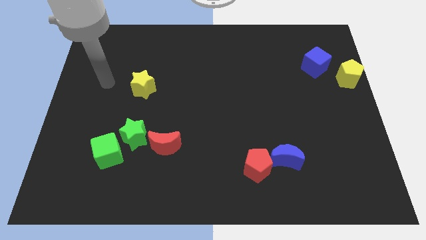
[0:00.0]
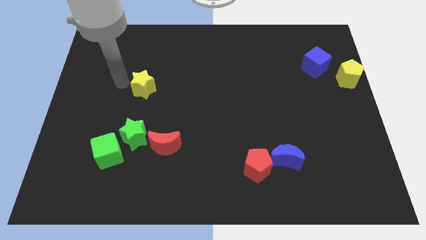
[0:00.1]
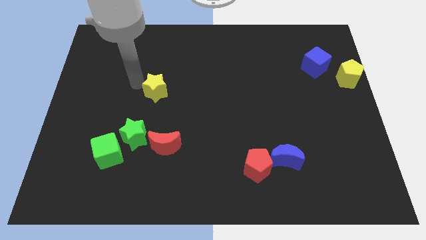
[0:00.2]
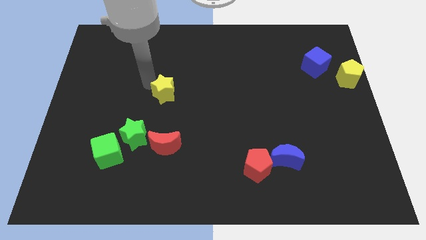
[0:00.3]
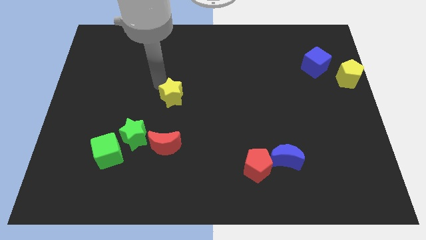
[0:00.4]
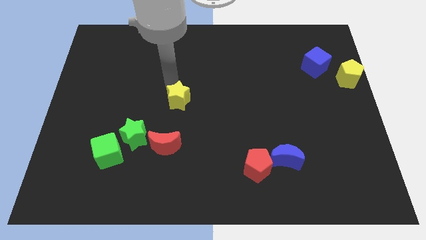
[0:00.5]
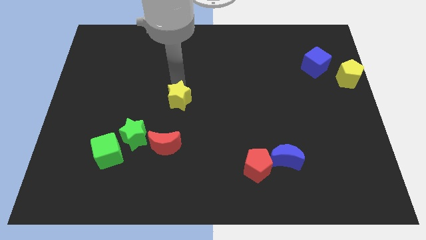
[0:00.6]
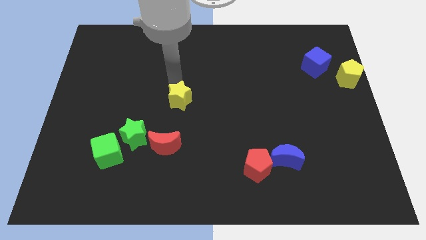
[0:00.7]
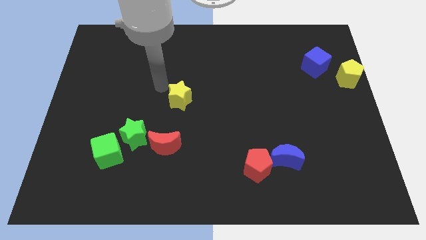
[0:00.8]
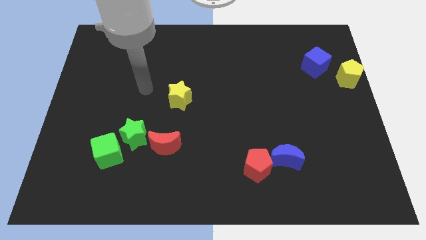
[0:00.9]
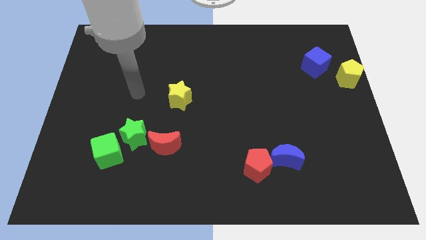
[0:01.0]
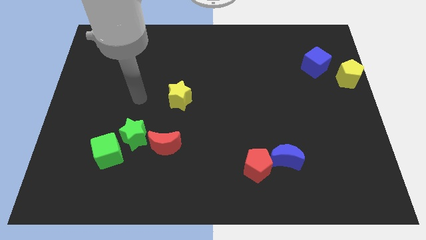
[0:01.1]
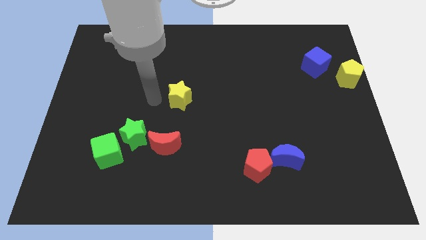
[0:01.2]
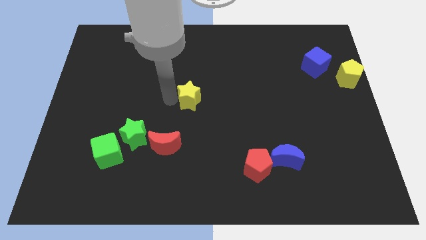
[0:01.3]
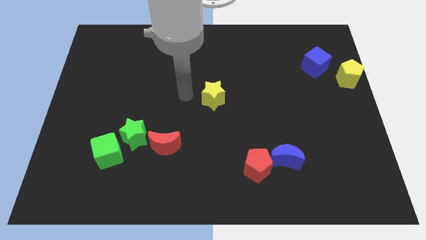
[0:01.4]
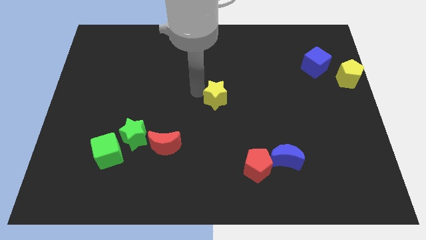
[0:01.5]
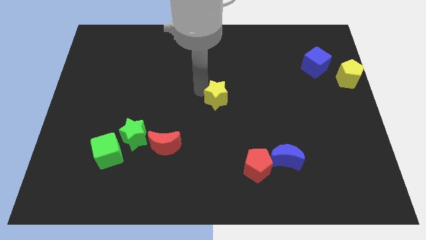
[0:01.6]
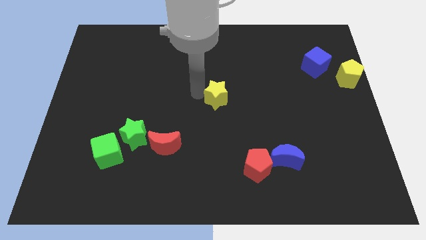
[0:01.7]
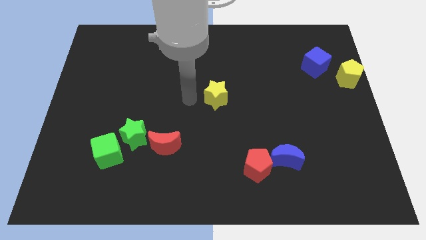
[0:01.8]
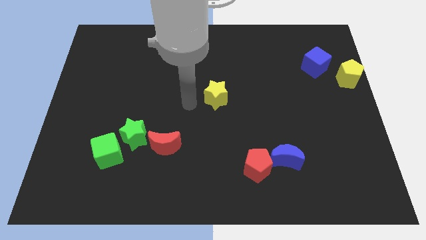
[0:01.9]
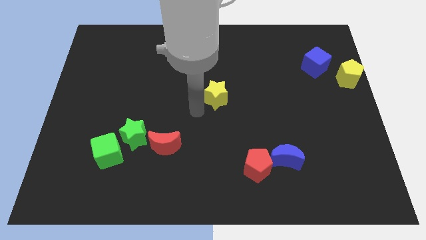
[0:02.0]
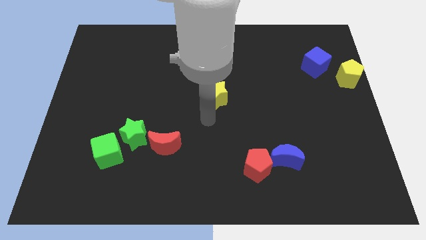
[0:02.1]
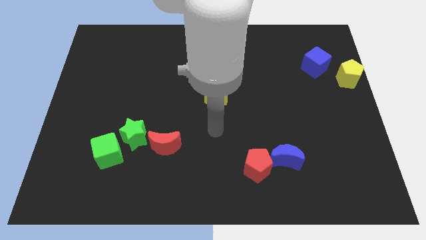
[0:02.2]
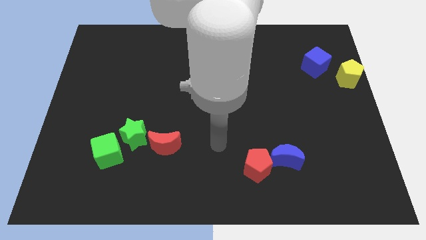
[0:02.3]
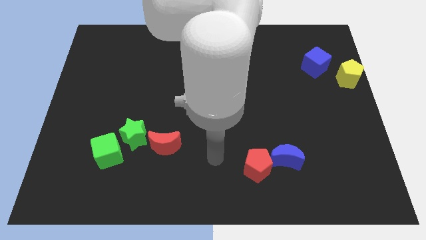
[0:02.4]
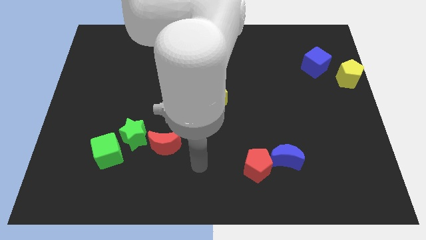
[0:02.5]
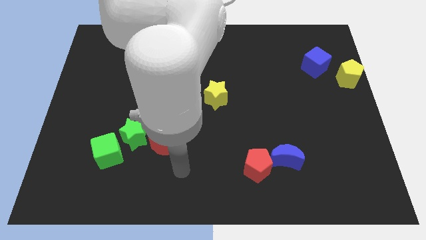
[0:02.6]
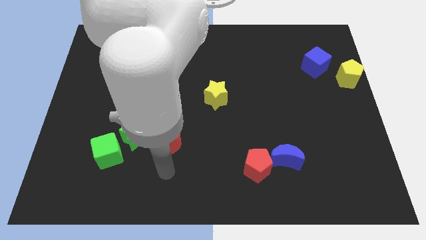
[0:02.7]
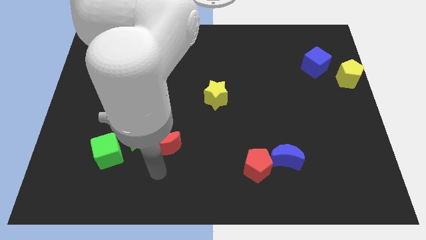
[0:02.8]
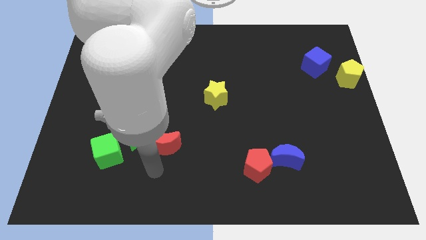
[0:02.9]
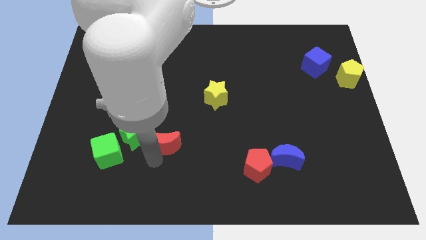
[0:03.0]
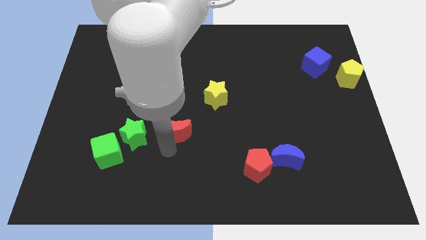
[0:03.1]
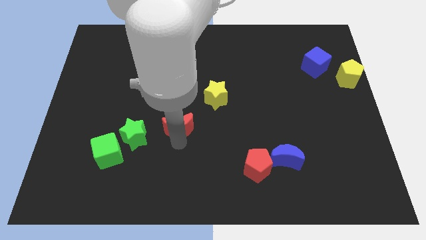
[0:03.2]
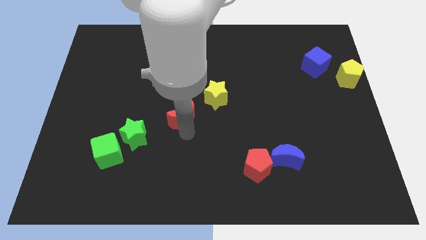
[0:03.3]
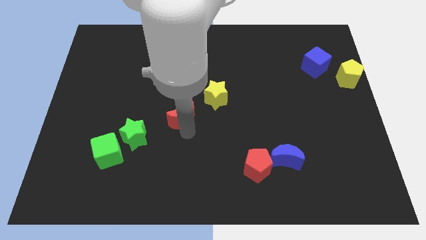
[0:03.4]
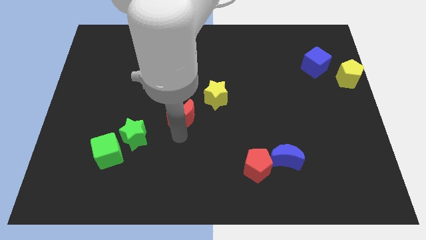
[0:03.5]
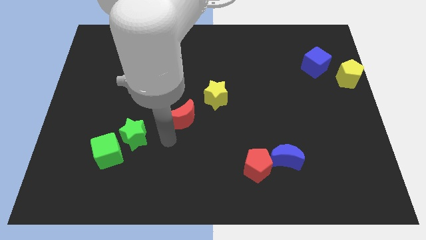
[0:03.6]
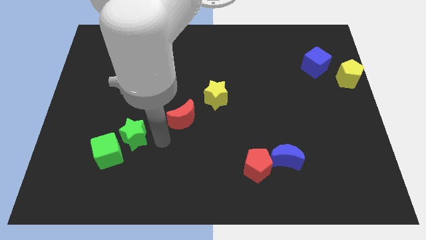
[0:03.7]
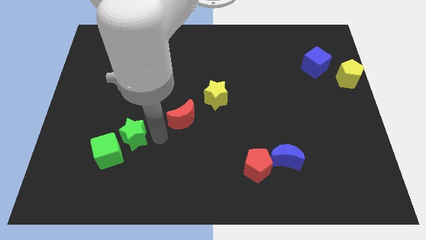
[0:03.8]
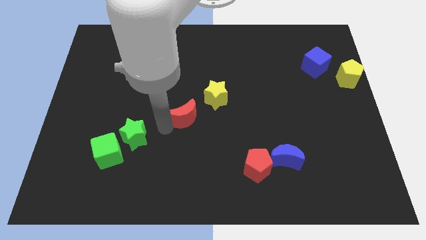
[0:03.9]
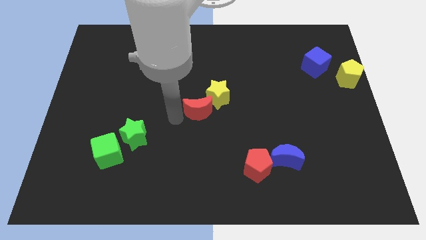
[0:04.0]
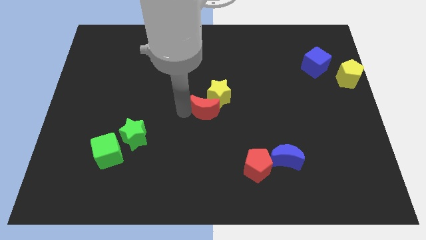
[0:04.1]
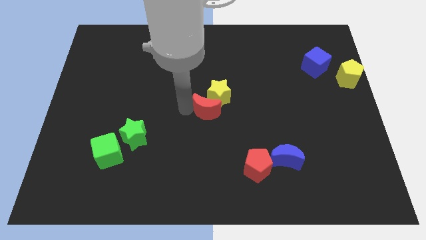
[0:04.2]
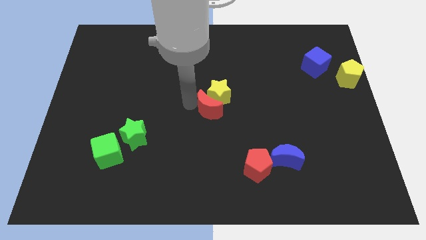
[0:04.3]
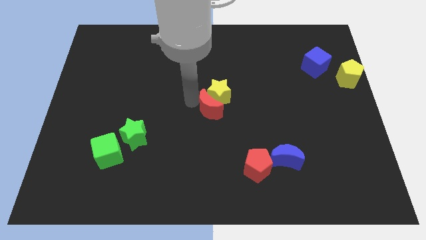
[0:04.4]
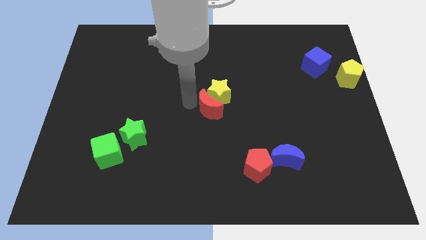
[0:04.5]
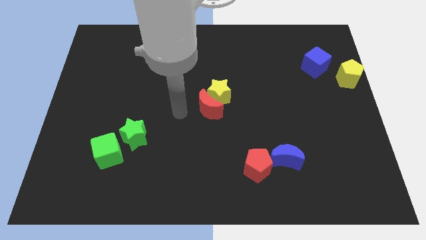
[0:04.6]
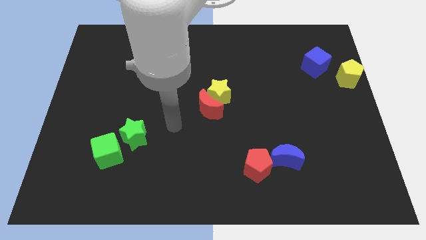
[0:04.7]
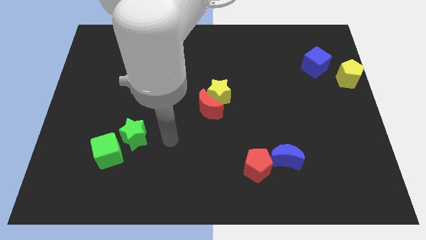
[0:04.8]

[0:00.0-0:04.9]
move the red crescent into the yellow star

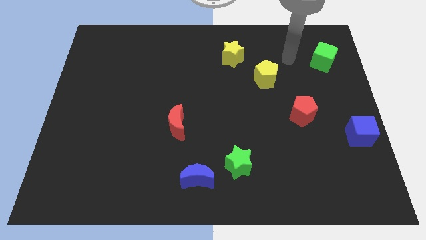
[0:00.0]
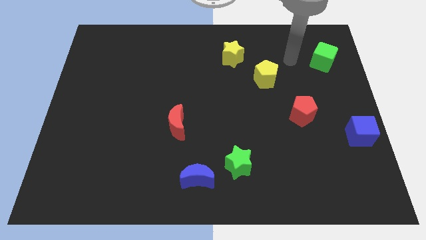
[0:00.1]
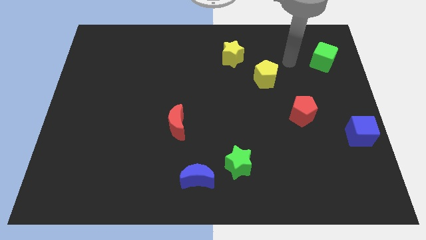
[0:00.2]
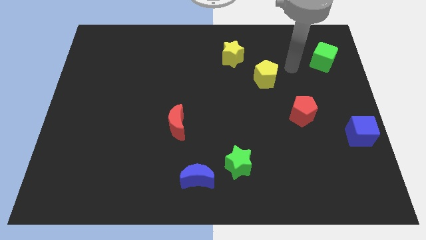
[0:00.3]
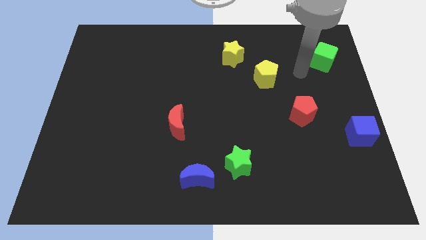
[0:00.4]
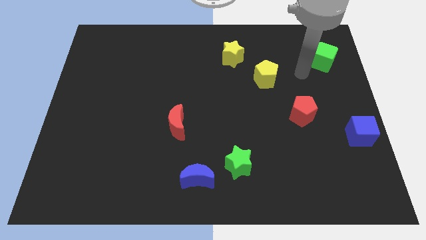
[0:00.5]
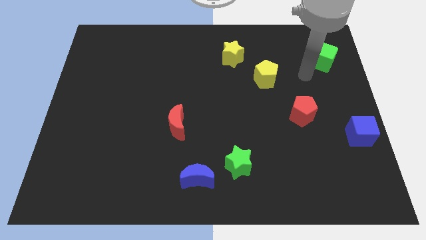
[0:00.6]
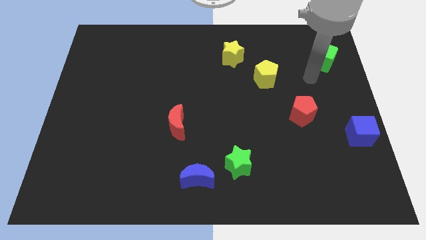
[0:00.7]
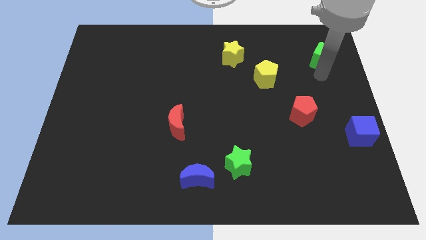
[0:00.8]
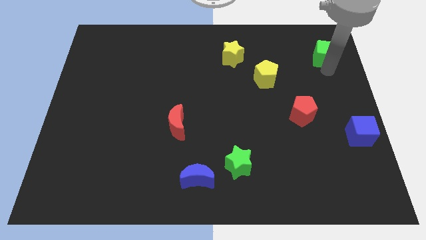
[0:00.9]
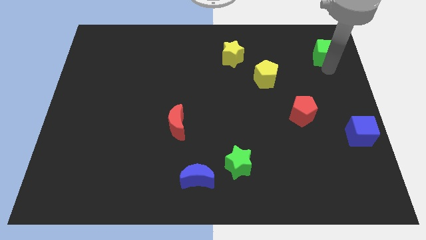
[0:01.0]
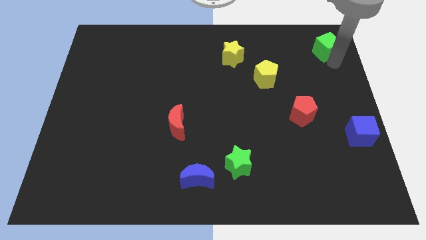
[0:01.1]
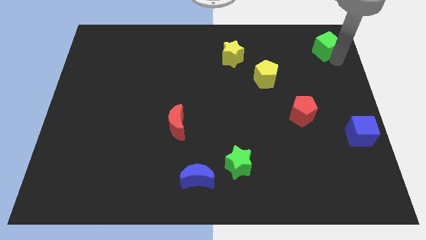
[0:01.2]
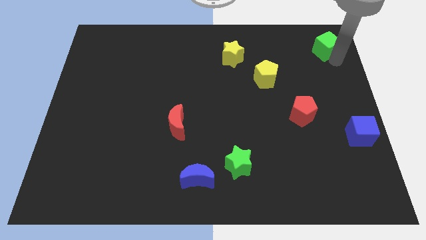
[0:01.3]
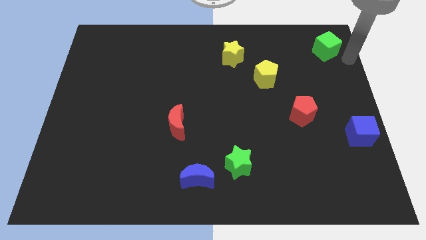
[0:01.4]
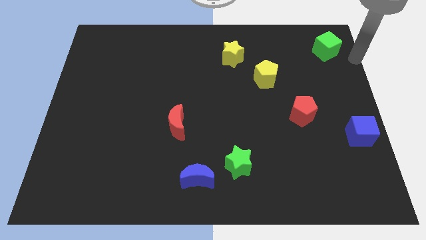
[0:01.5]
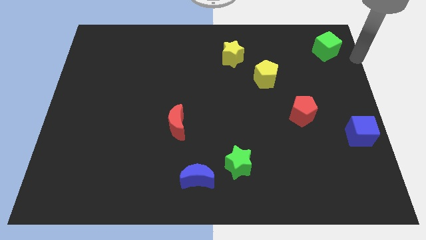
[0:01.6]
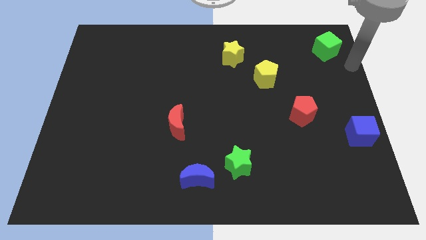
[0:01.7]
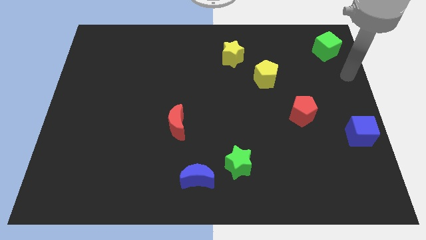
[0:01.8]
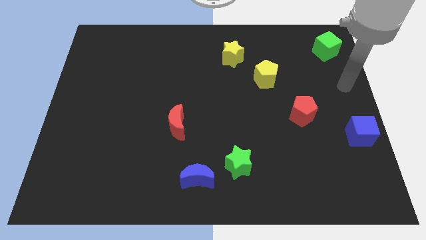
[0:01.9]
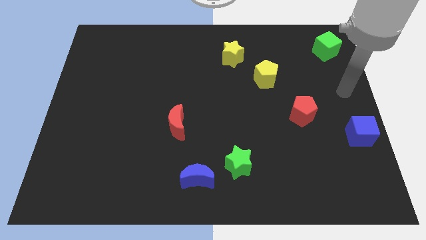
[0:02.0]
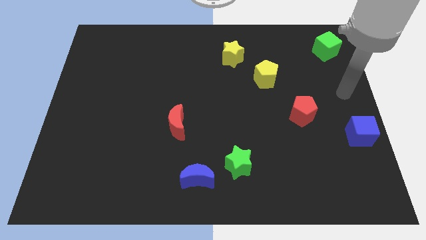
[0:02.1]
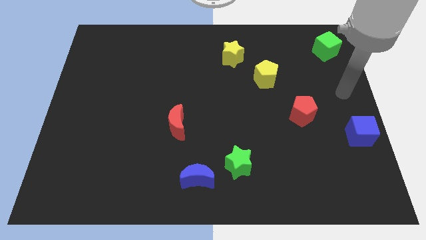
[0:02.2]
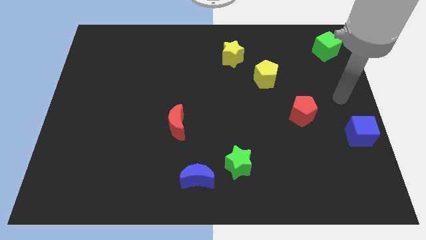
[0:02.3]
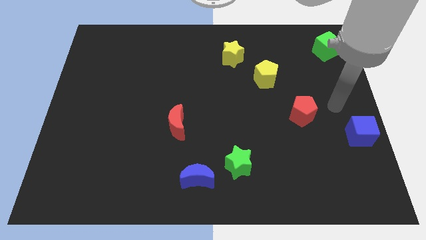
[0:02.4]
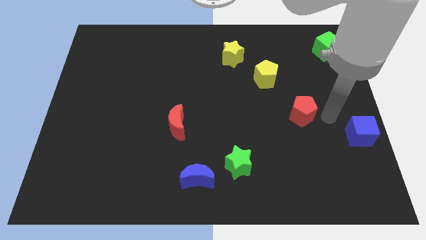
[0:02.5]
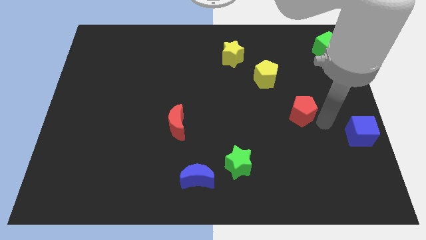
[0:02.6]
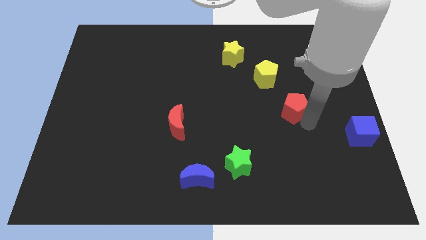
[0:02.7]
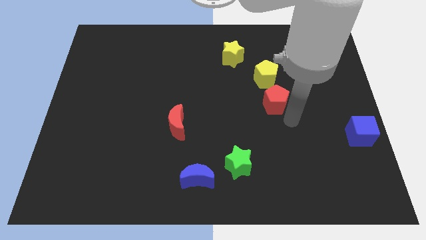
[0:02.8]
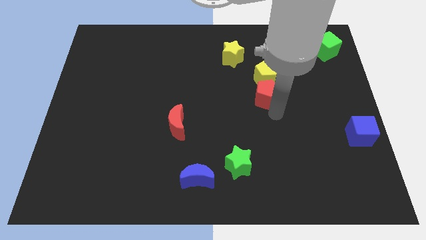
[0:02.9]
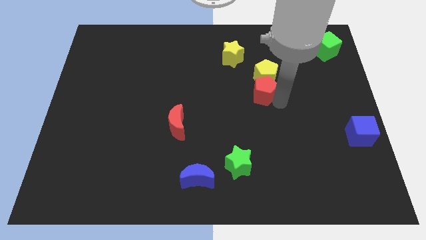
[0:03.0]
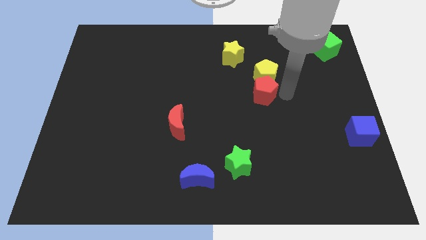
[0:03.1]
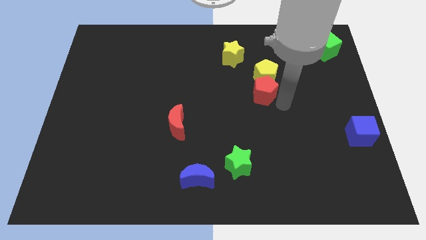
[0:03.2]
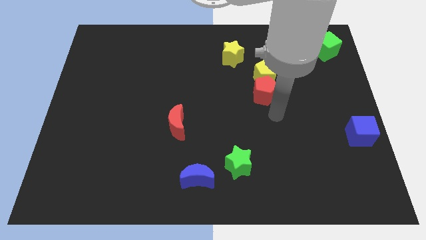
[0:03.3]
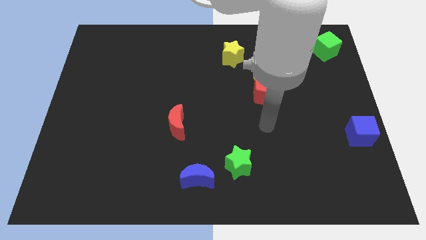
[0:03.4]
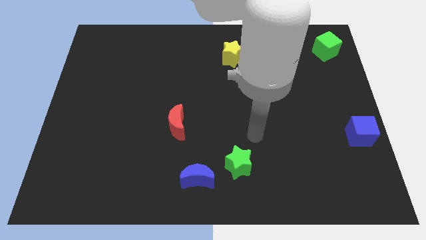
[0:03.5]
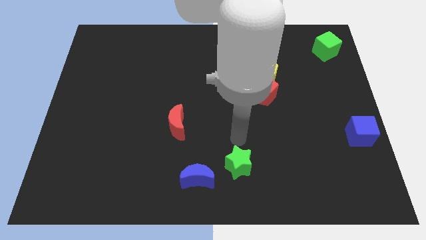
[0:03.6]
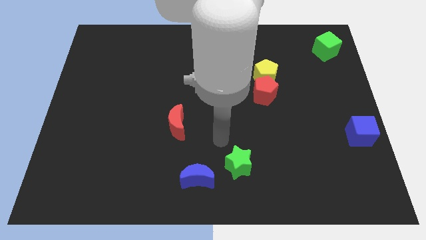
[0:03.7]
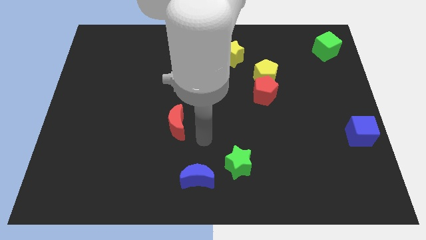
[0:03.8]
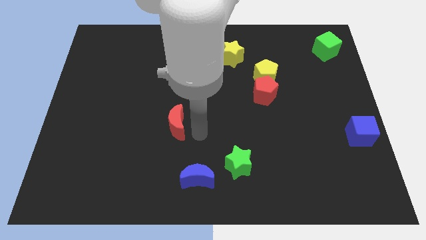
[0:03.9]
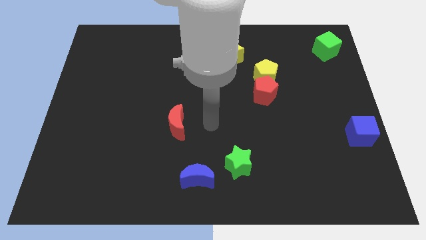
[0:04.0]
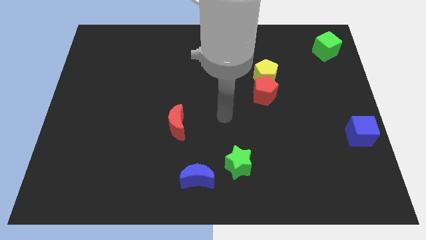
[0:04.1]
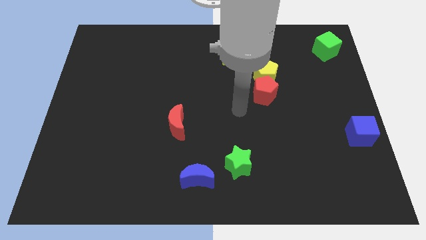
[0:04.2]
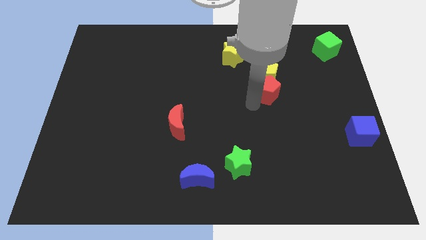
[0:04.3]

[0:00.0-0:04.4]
push the red pentagon below the yellow pentagon
